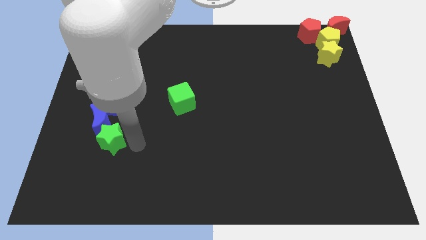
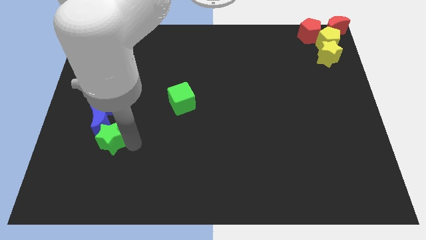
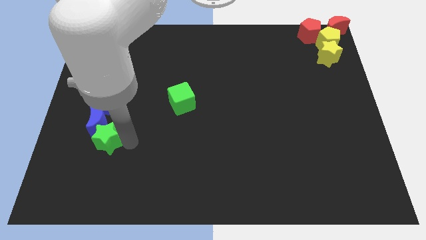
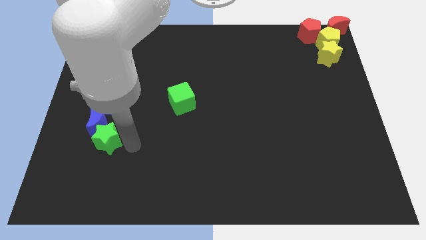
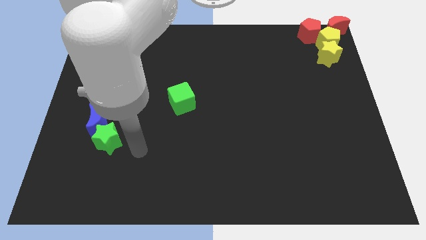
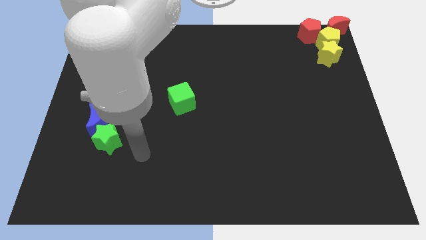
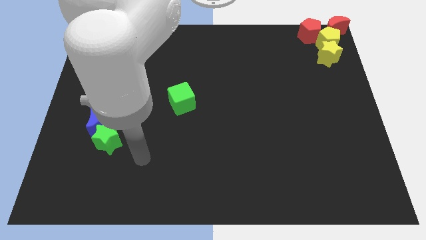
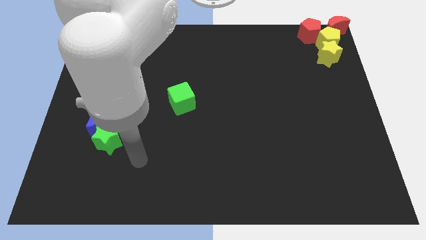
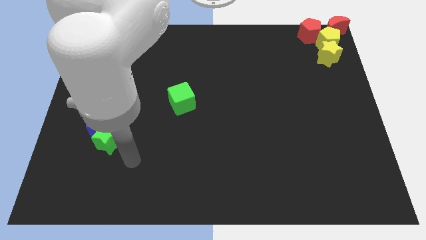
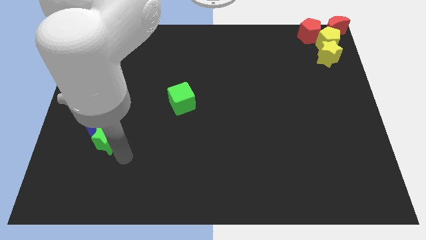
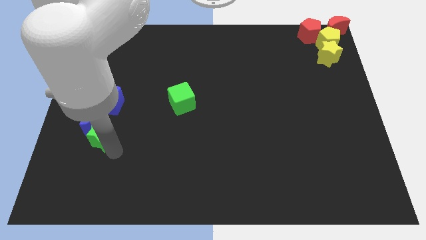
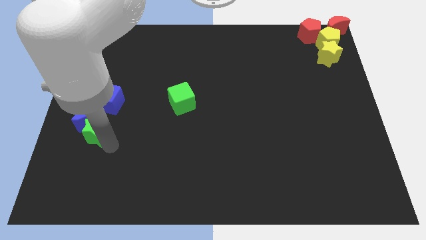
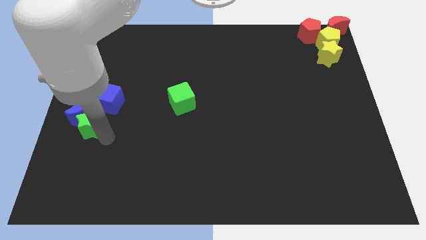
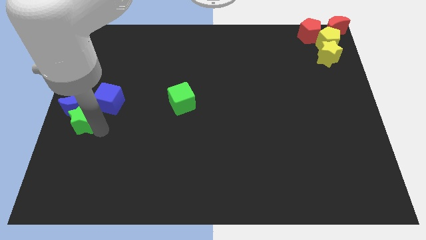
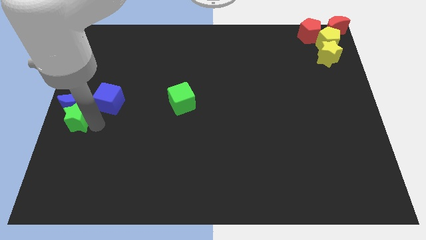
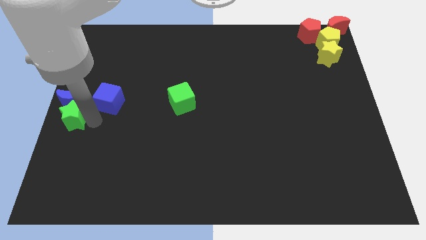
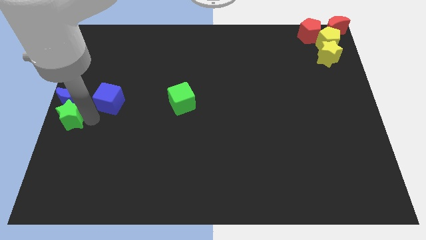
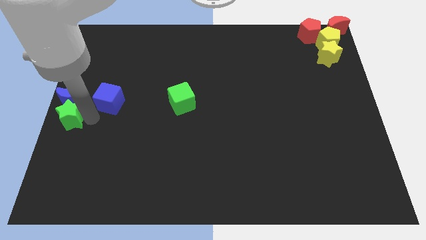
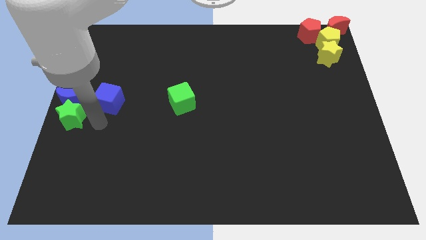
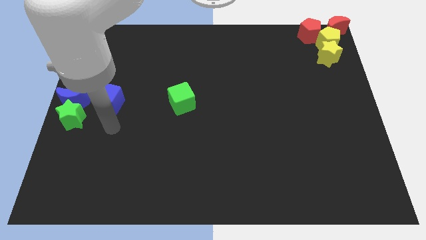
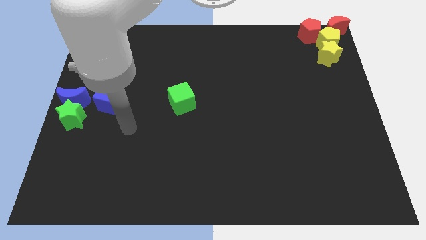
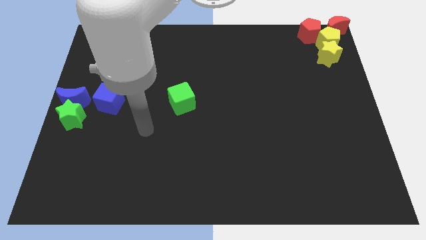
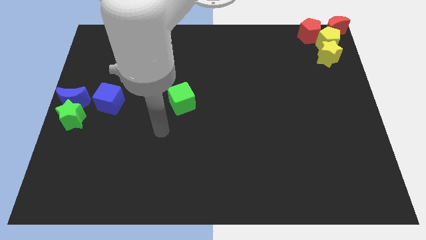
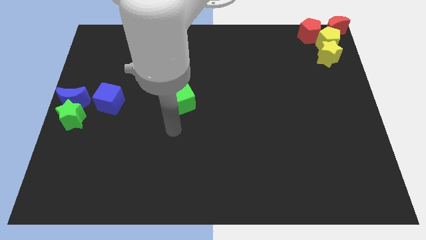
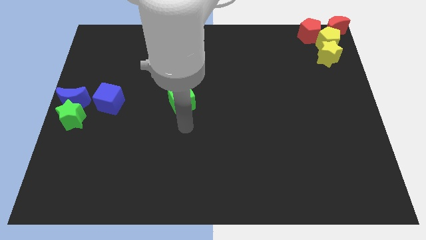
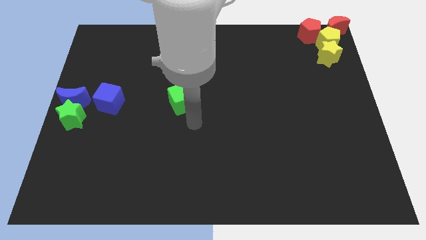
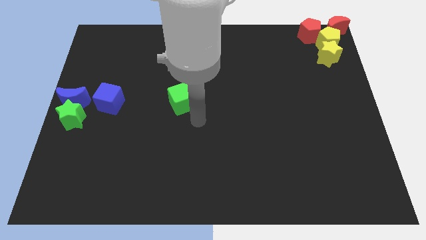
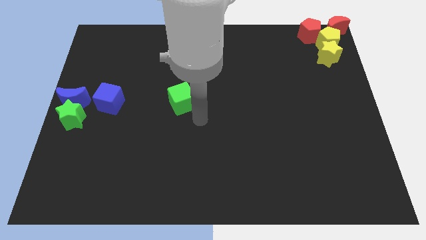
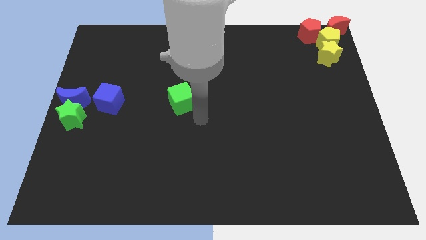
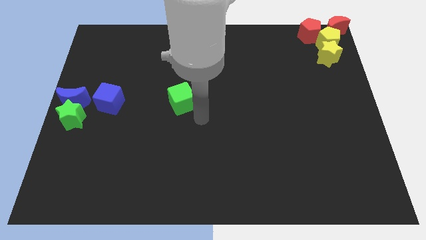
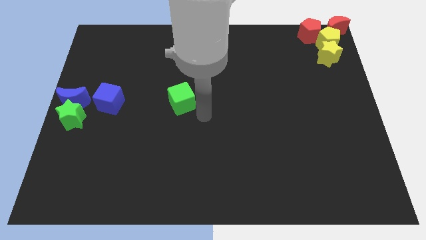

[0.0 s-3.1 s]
place the blue crescent to the left of the blue cube

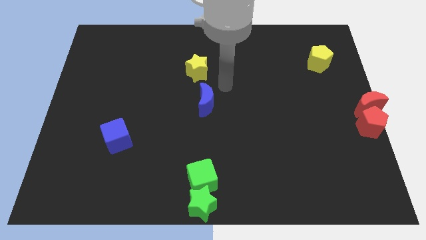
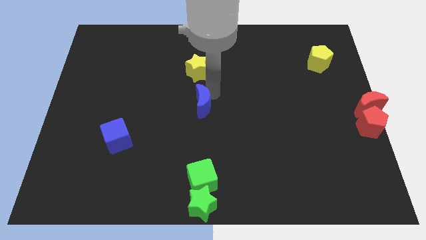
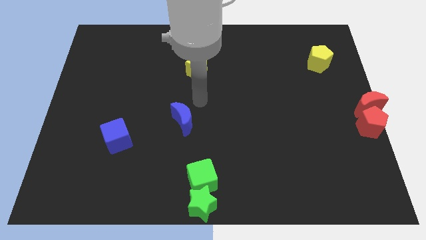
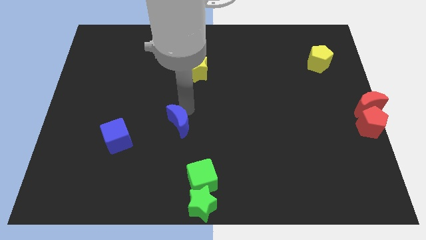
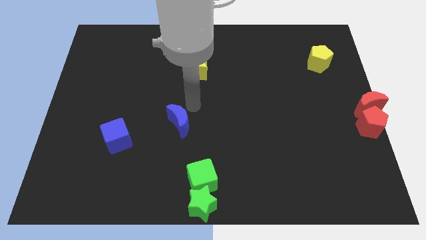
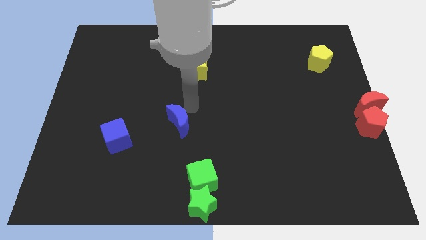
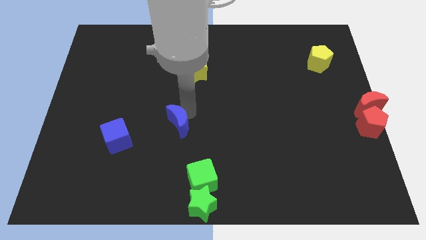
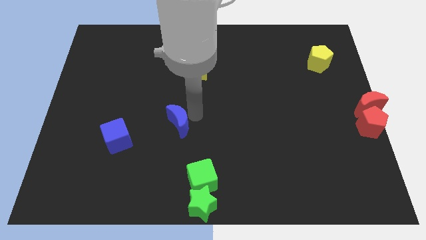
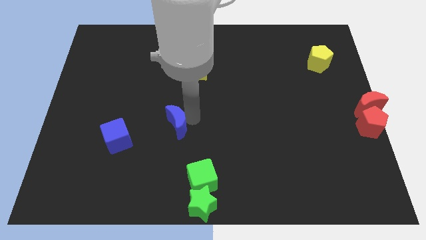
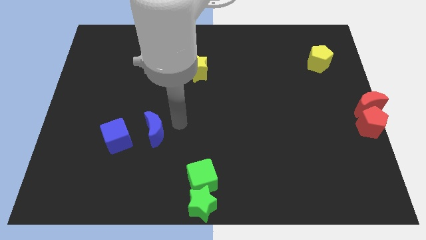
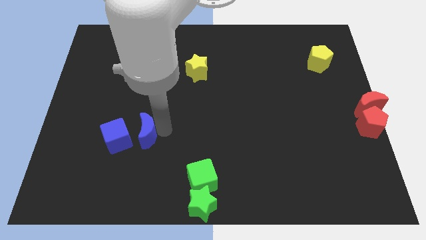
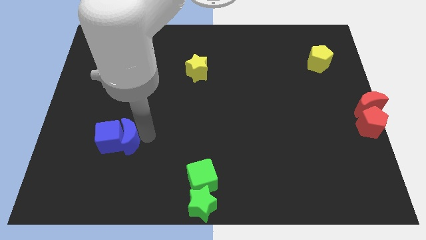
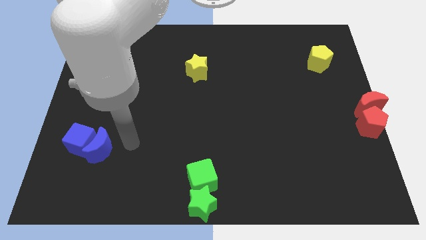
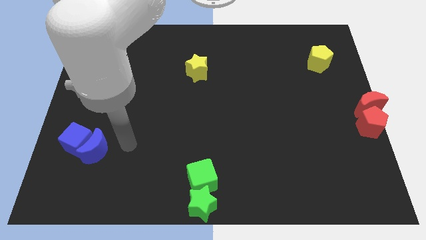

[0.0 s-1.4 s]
push the blue moon into the blue cube

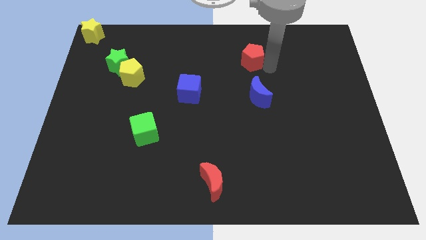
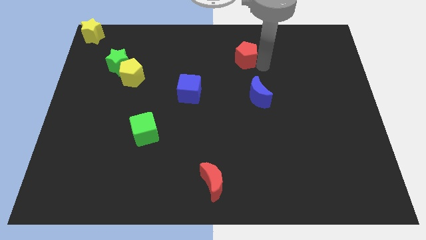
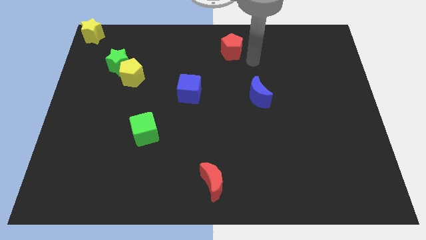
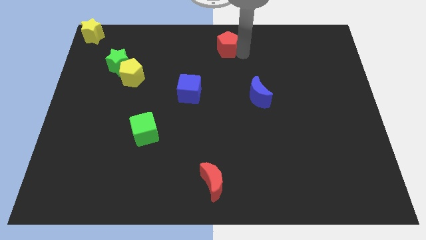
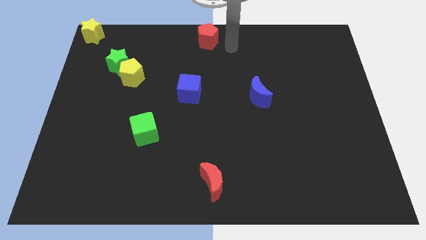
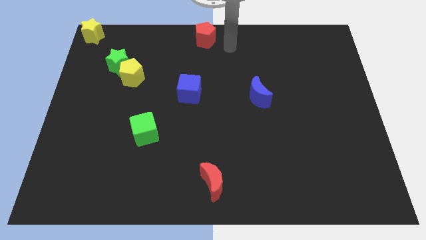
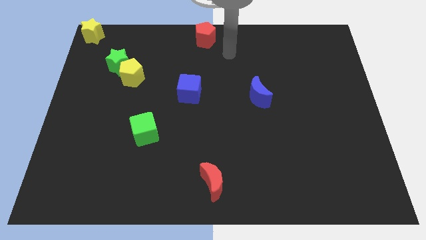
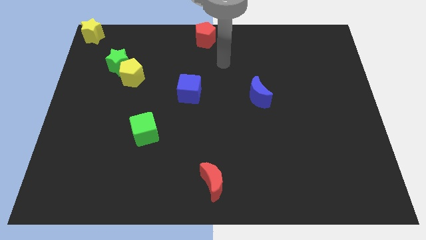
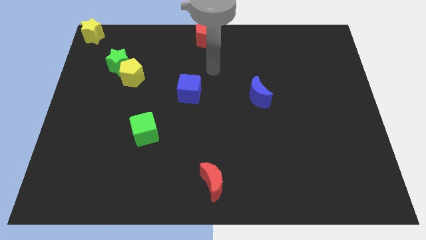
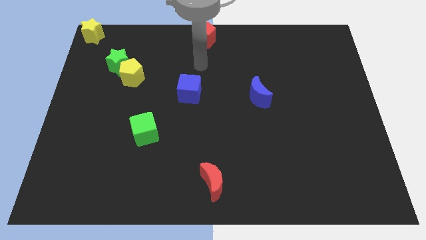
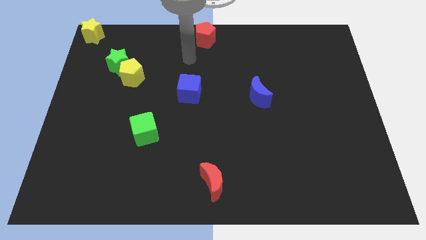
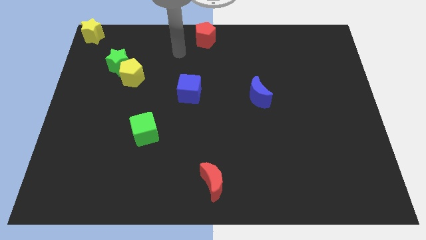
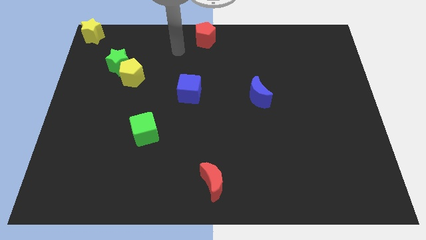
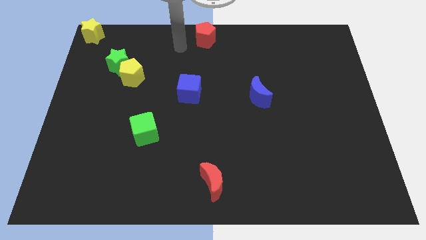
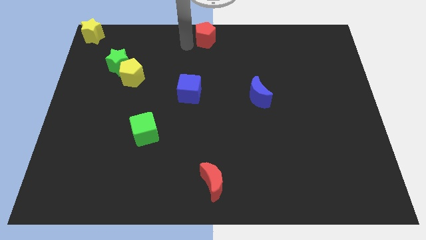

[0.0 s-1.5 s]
slide the red pentagon towards the top center of the board

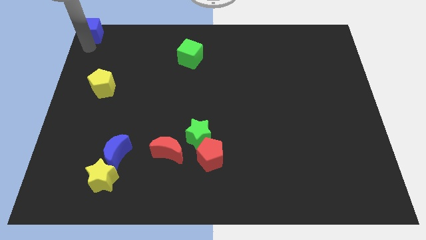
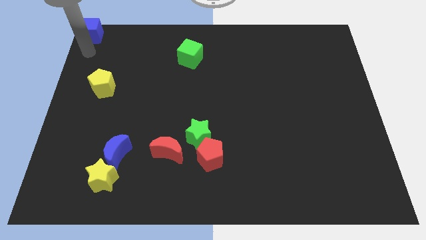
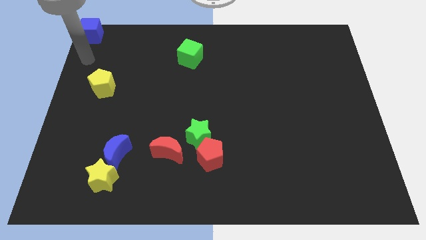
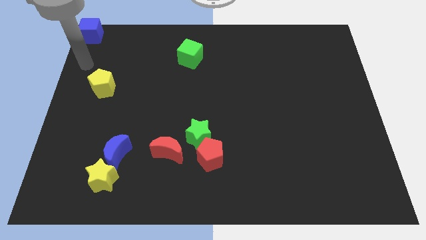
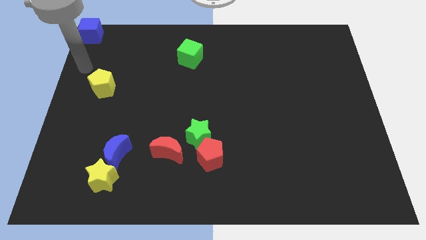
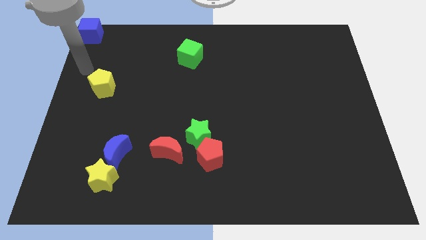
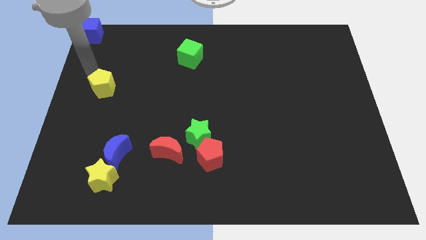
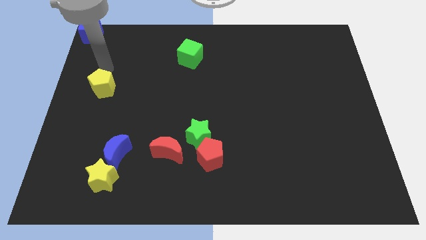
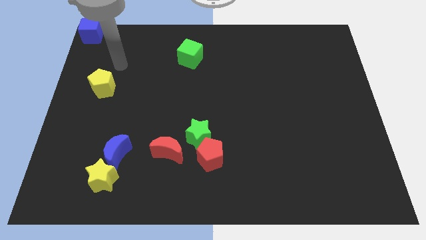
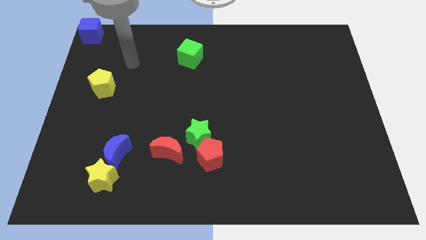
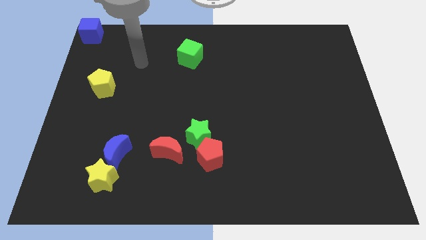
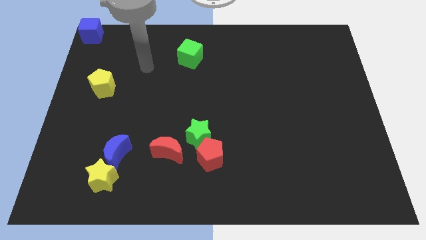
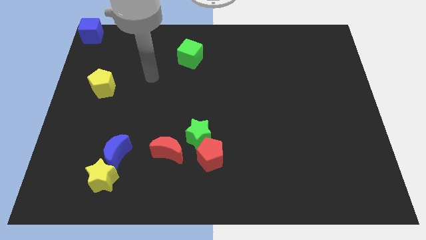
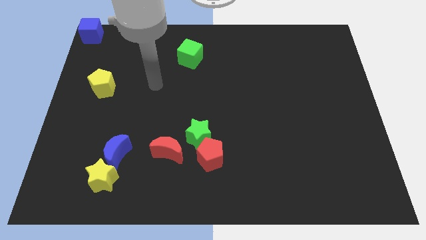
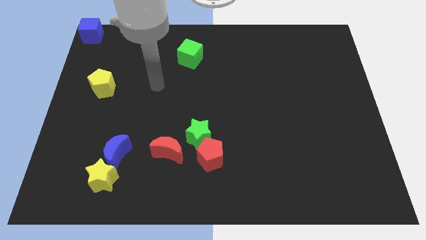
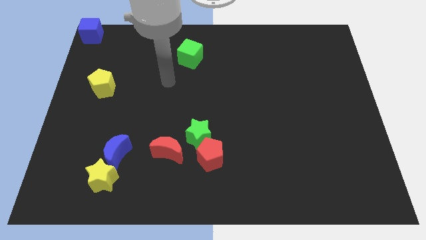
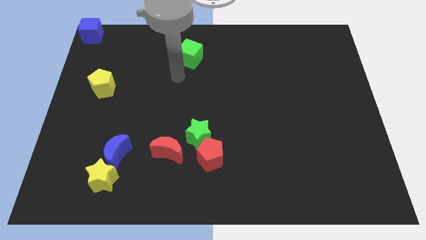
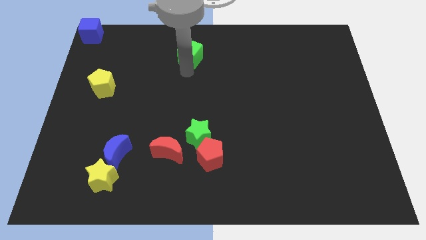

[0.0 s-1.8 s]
move your arm from the blue cube

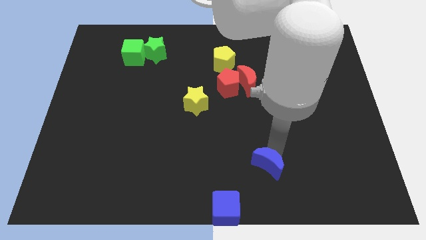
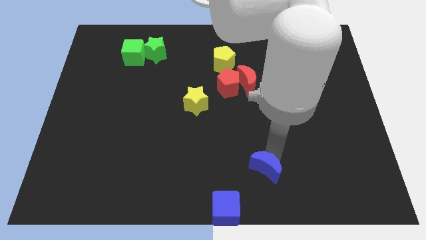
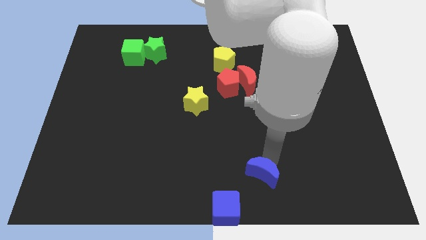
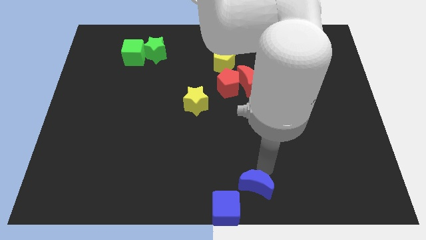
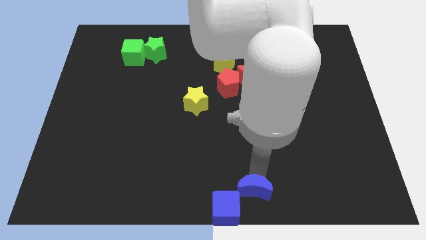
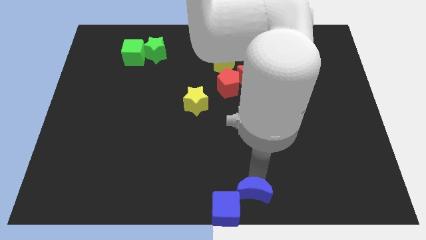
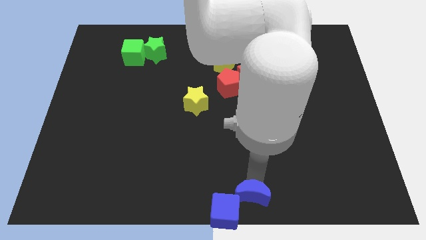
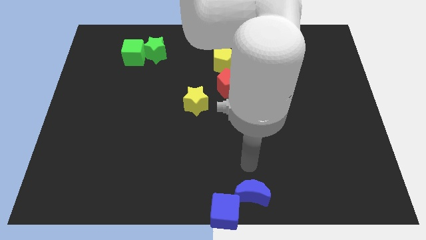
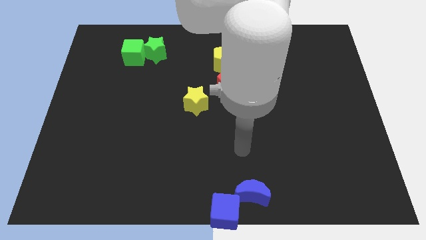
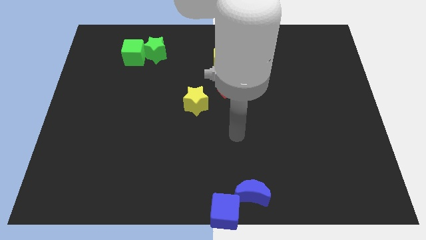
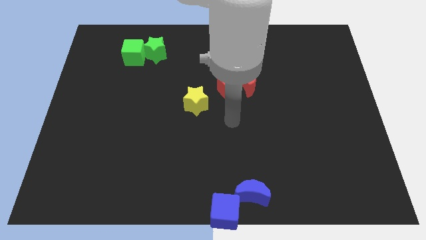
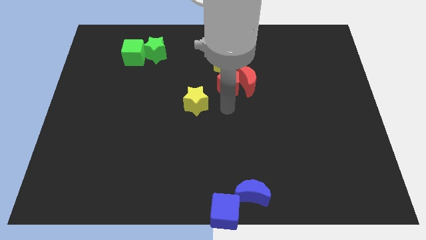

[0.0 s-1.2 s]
place blue crescent near to blue cube
